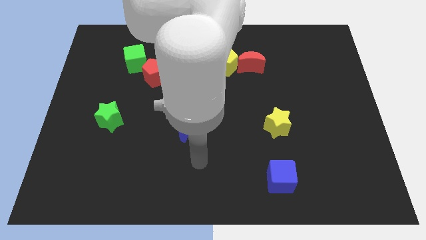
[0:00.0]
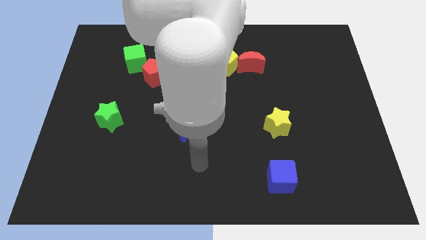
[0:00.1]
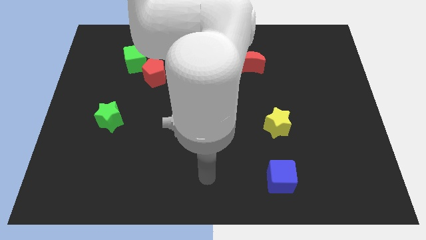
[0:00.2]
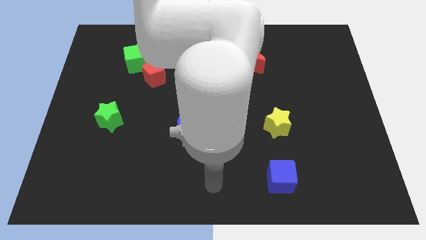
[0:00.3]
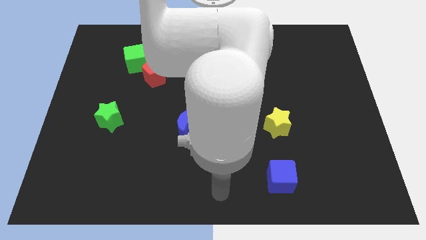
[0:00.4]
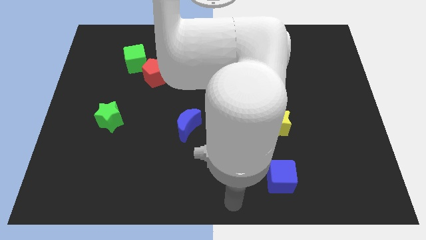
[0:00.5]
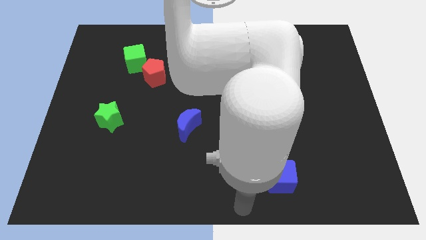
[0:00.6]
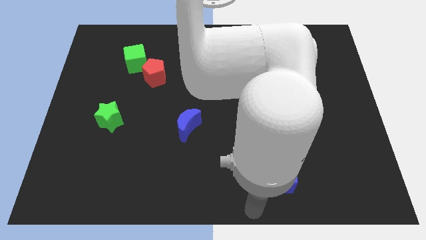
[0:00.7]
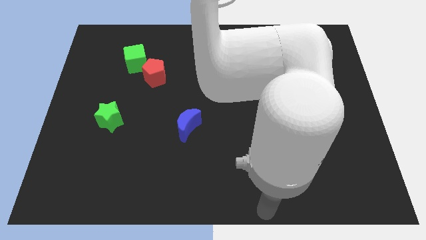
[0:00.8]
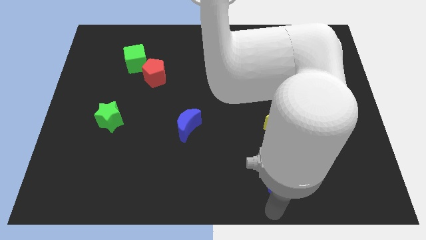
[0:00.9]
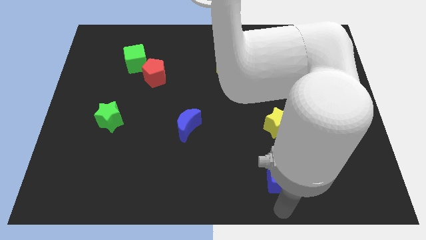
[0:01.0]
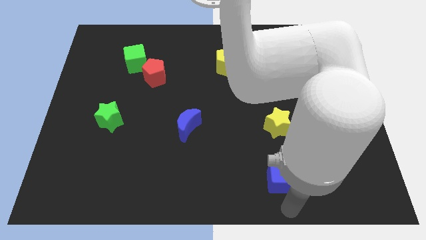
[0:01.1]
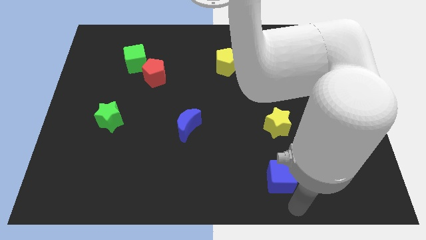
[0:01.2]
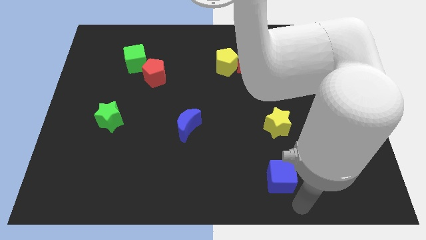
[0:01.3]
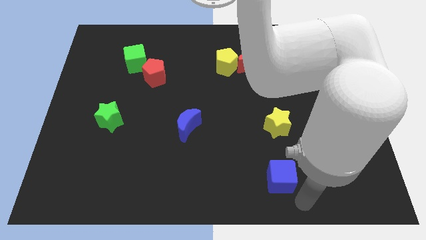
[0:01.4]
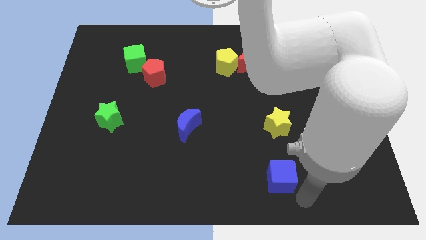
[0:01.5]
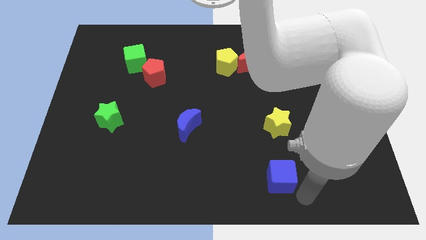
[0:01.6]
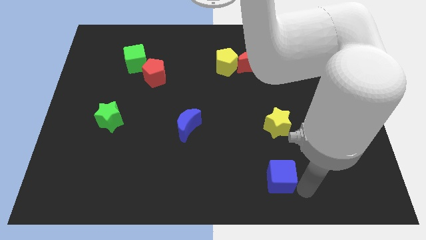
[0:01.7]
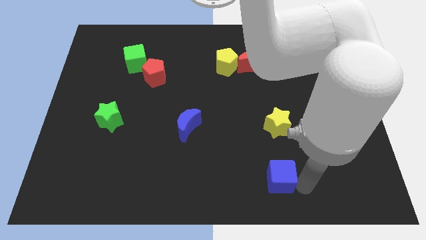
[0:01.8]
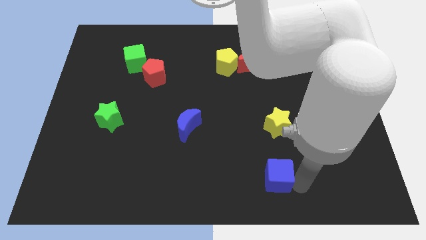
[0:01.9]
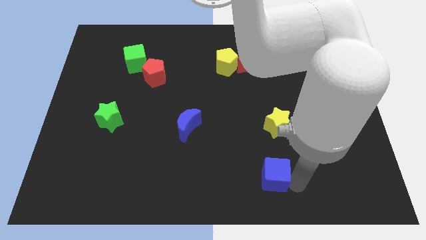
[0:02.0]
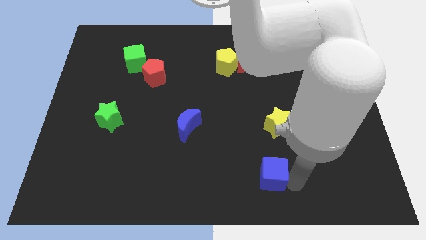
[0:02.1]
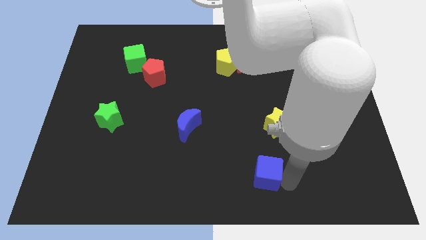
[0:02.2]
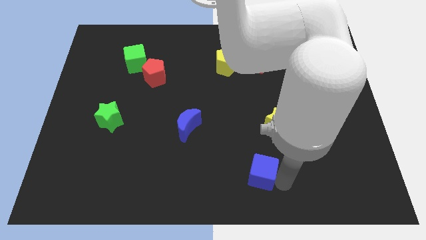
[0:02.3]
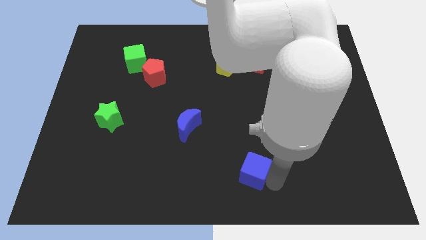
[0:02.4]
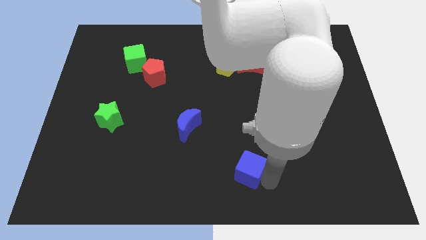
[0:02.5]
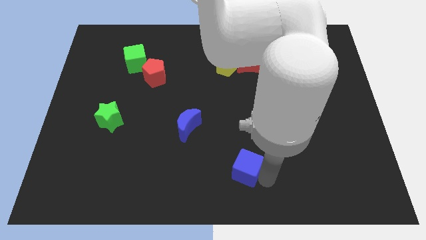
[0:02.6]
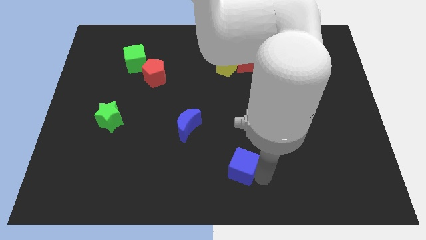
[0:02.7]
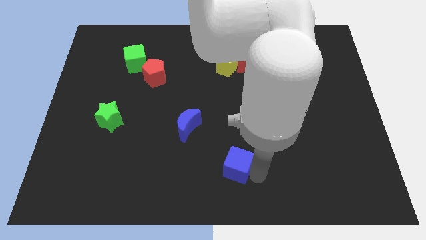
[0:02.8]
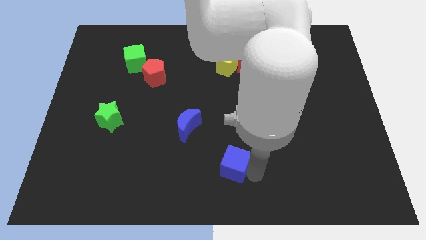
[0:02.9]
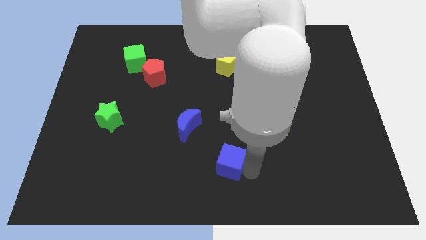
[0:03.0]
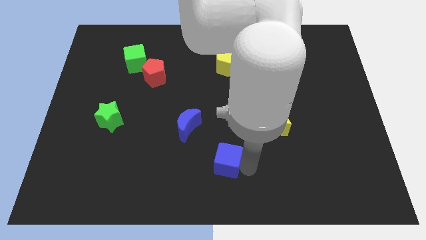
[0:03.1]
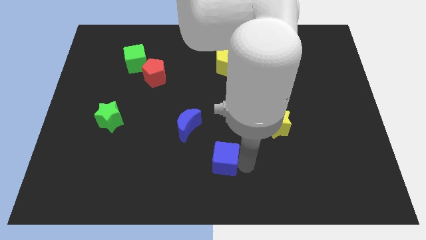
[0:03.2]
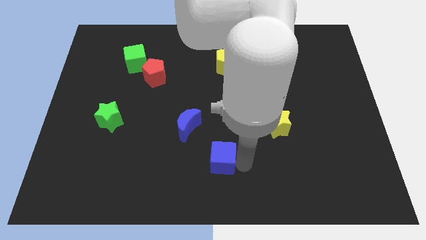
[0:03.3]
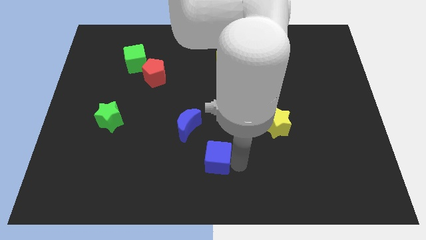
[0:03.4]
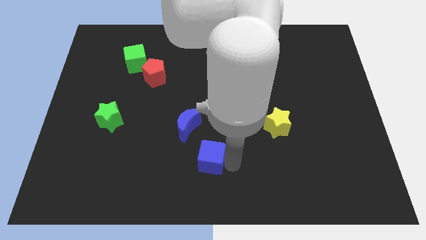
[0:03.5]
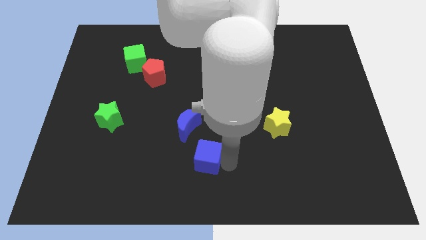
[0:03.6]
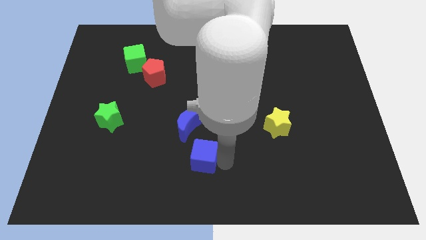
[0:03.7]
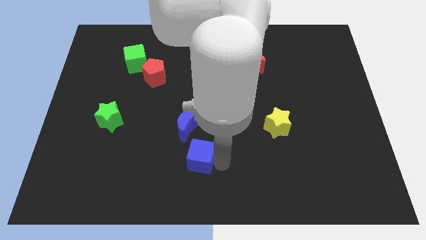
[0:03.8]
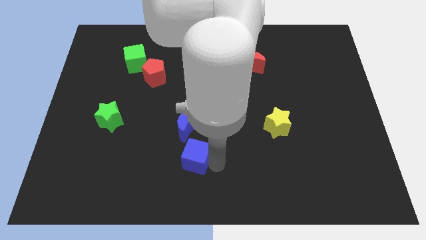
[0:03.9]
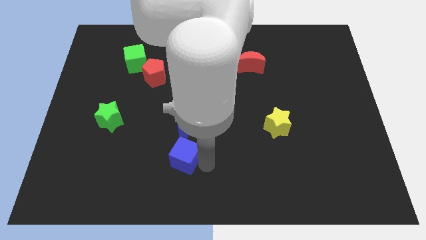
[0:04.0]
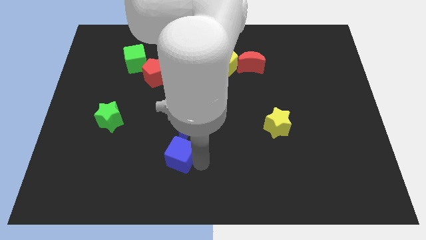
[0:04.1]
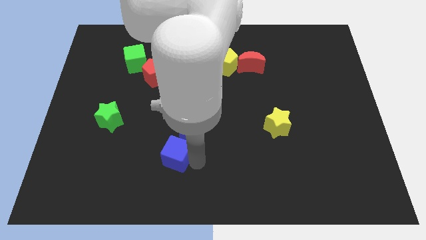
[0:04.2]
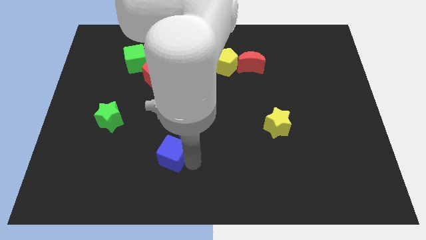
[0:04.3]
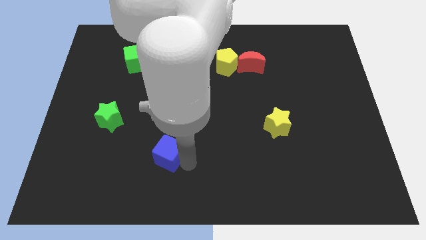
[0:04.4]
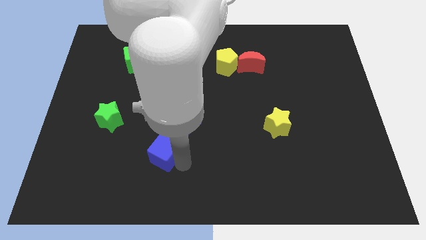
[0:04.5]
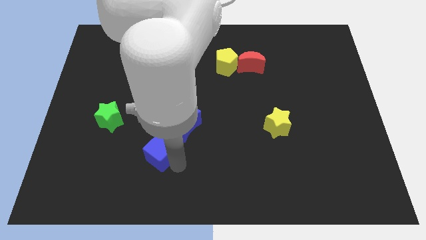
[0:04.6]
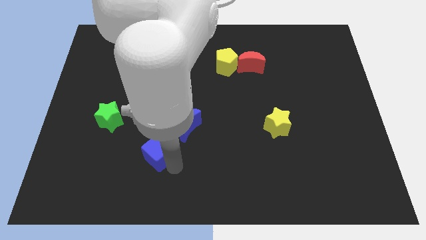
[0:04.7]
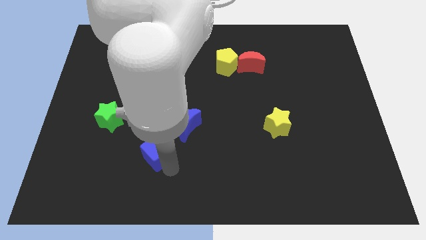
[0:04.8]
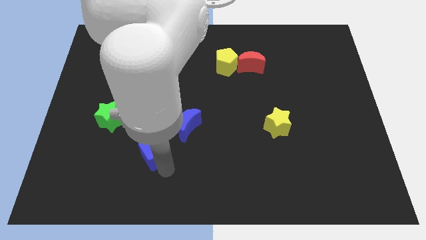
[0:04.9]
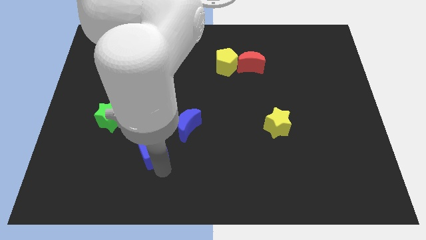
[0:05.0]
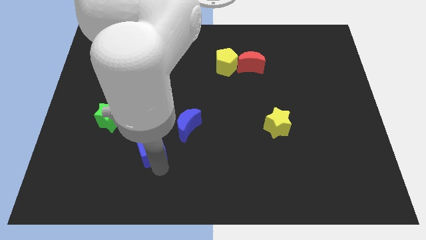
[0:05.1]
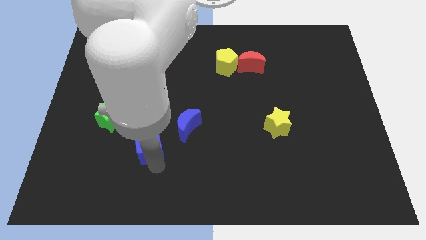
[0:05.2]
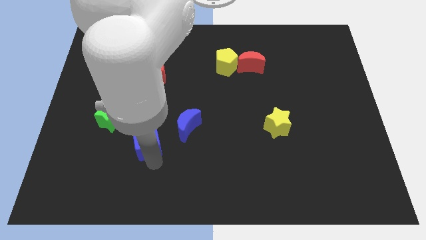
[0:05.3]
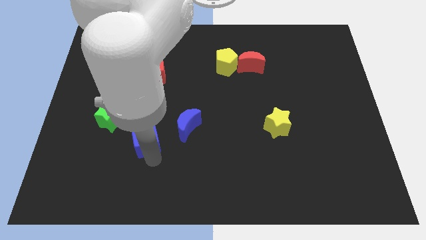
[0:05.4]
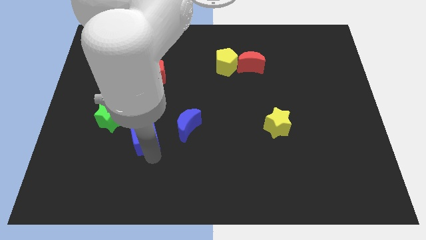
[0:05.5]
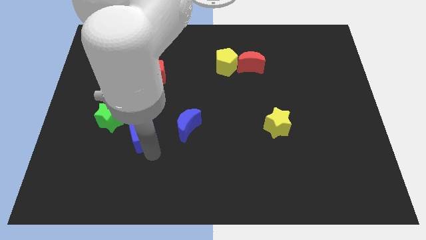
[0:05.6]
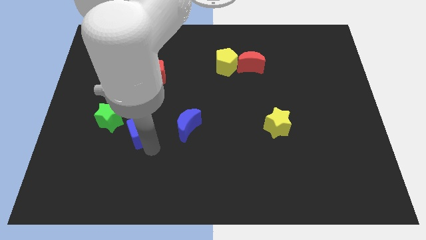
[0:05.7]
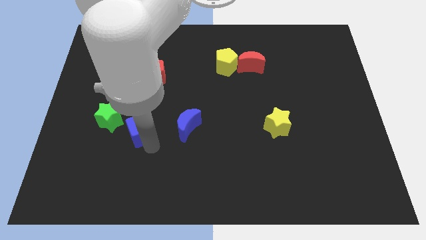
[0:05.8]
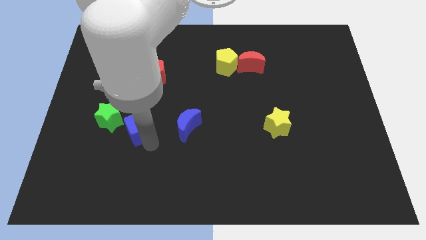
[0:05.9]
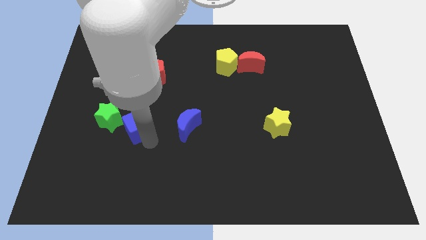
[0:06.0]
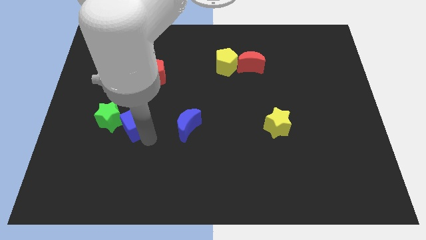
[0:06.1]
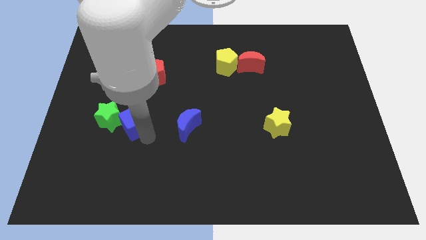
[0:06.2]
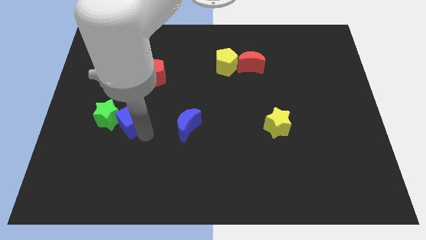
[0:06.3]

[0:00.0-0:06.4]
move the blue cube next to the green star

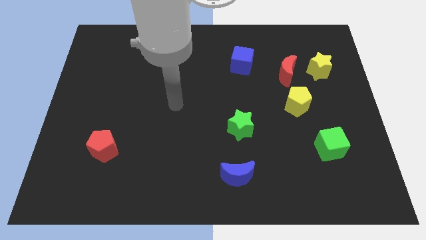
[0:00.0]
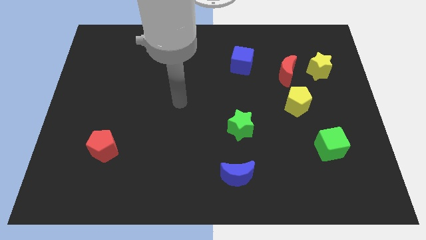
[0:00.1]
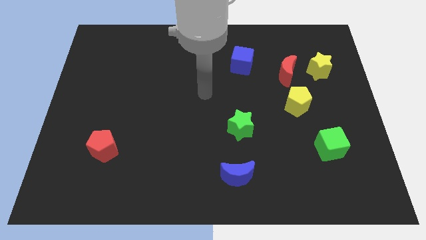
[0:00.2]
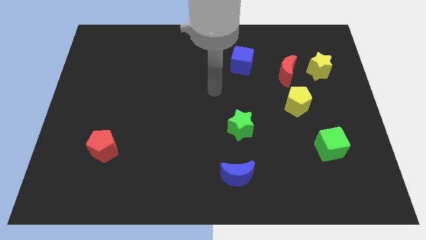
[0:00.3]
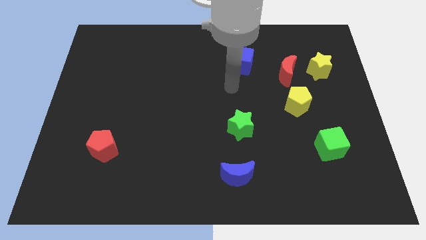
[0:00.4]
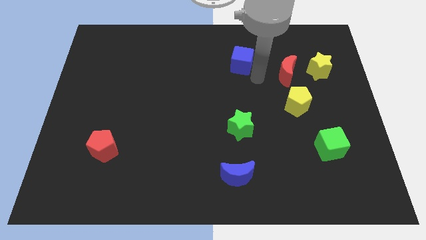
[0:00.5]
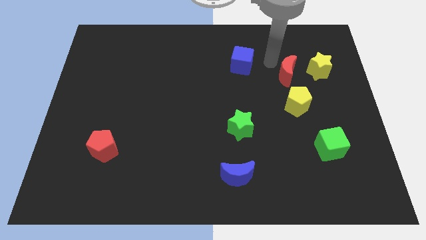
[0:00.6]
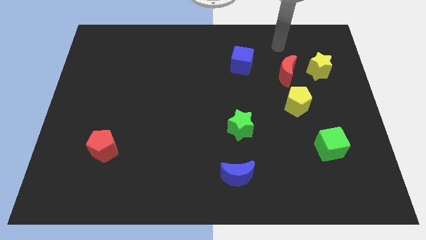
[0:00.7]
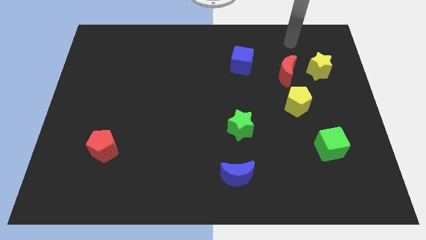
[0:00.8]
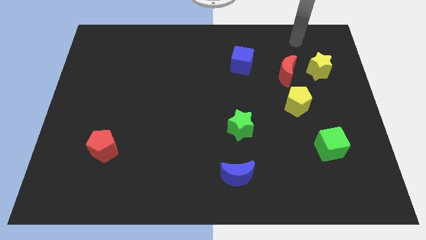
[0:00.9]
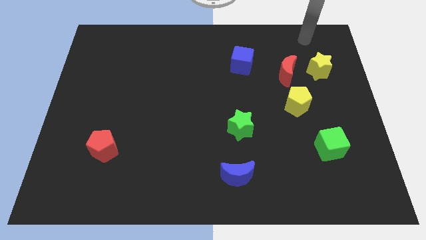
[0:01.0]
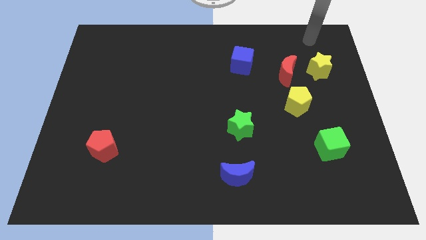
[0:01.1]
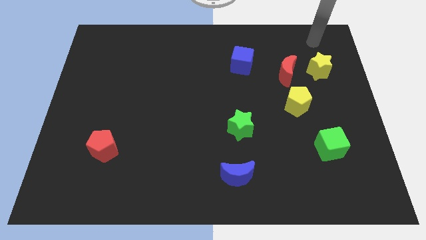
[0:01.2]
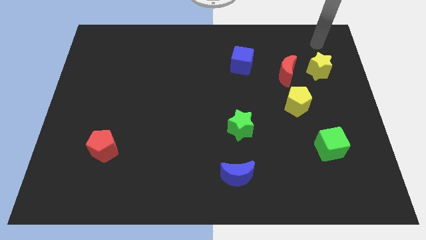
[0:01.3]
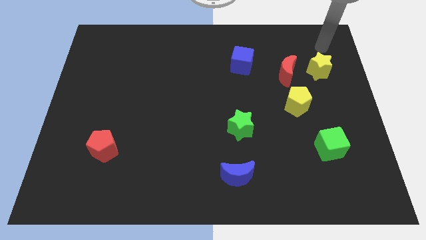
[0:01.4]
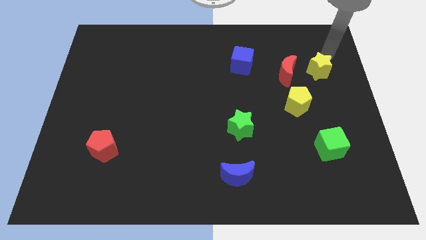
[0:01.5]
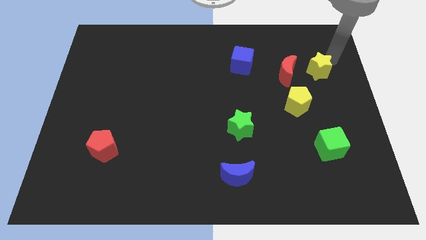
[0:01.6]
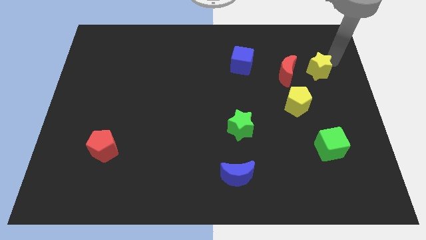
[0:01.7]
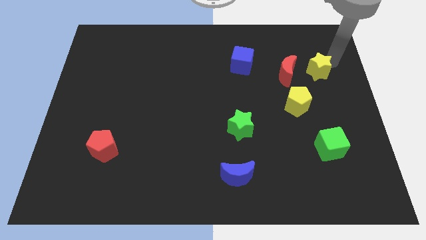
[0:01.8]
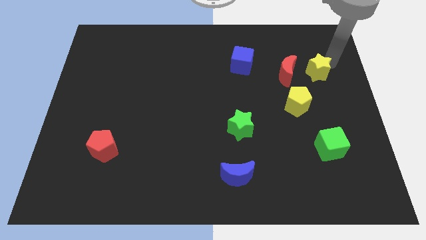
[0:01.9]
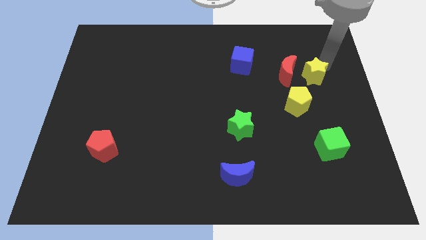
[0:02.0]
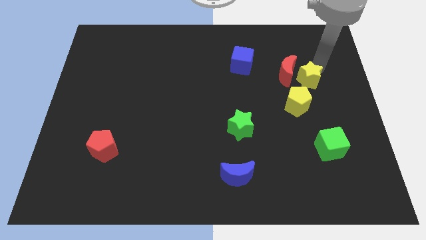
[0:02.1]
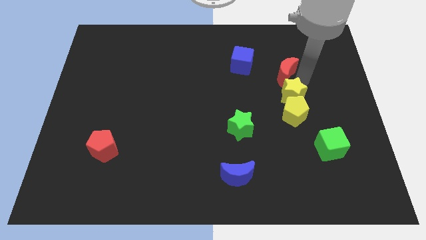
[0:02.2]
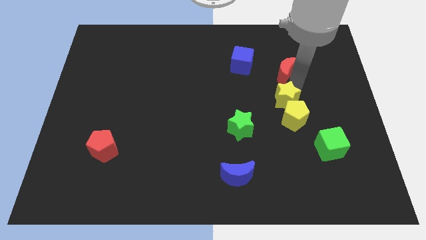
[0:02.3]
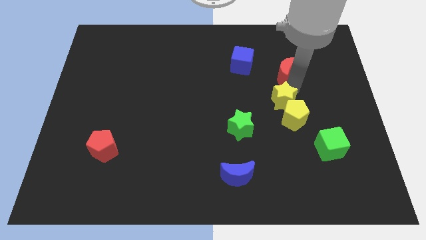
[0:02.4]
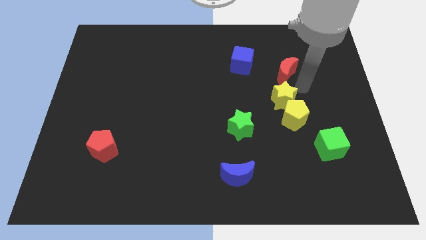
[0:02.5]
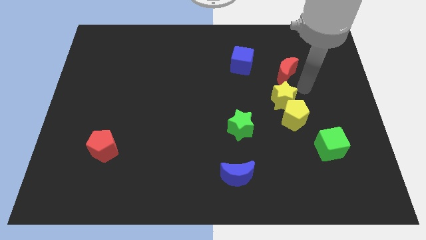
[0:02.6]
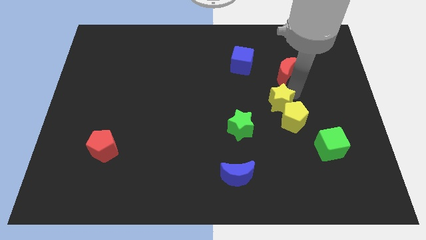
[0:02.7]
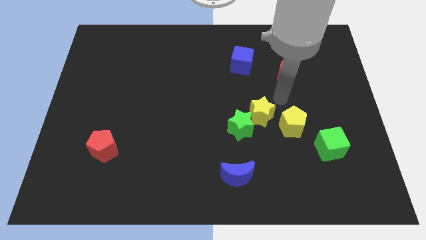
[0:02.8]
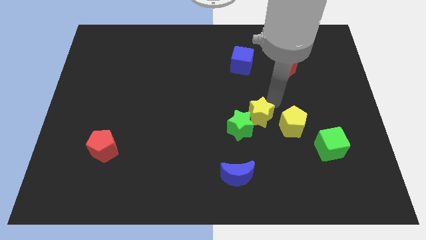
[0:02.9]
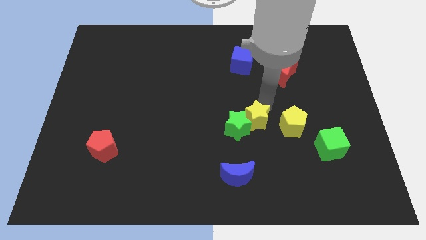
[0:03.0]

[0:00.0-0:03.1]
put the yellow star next to the green star
